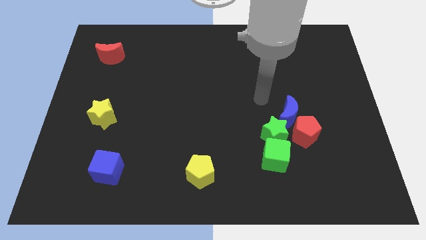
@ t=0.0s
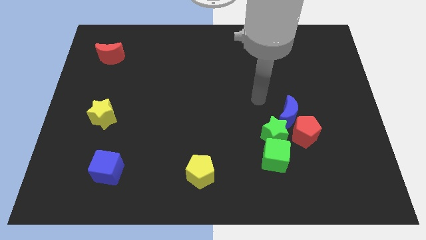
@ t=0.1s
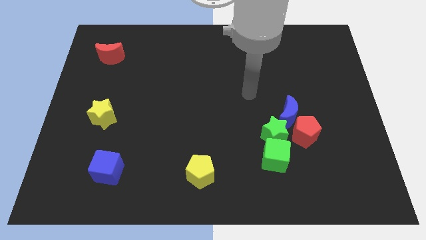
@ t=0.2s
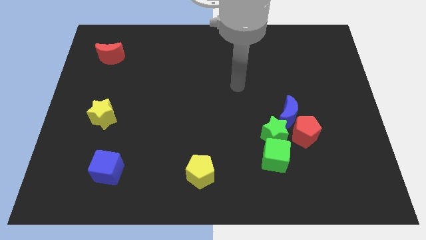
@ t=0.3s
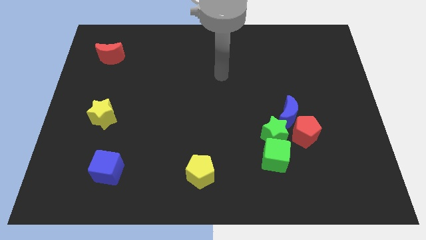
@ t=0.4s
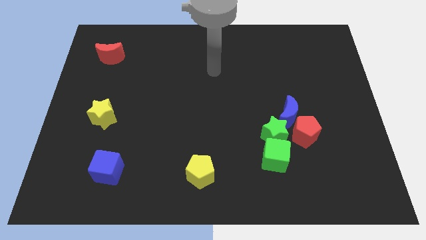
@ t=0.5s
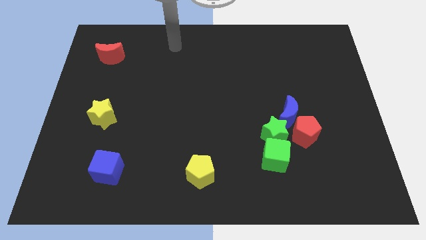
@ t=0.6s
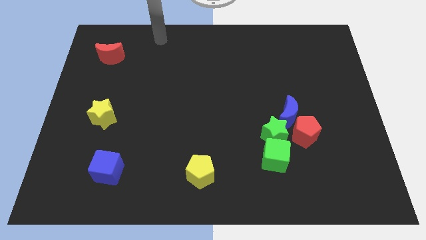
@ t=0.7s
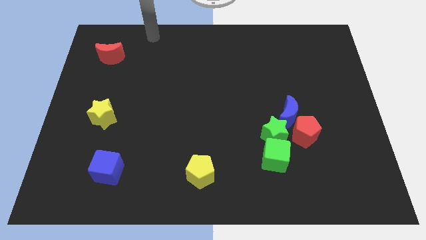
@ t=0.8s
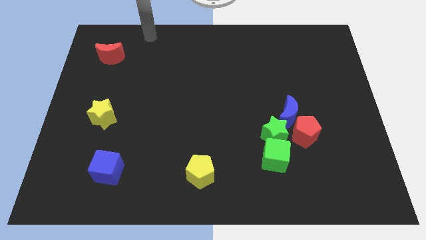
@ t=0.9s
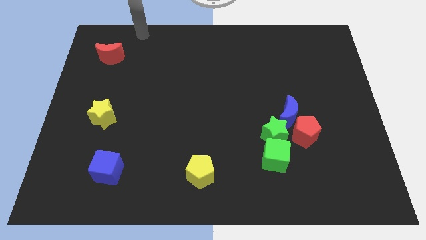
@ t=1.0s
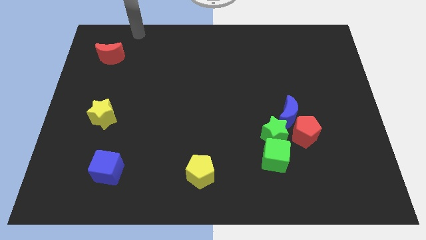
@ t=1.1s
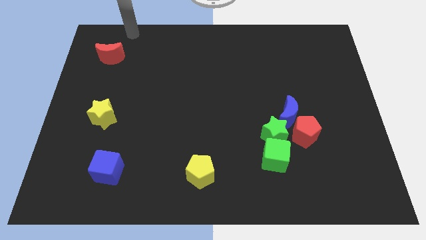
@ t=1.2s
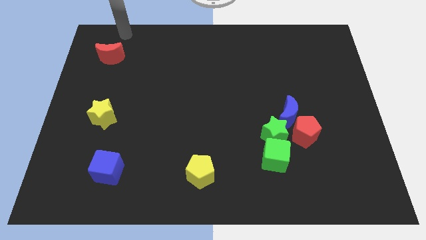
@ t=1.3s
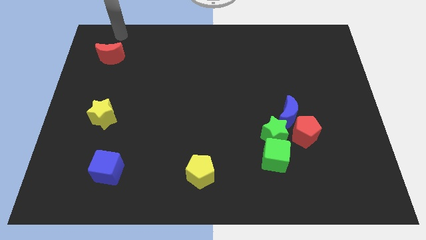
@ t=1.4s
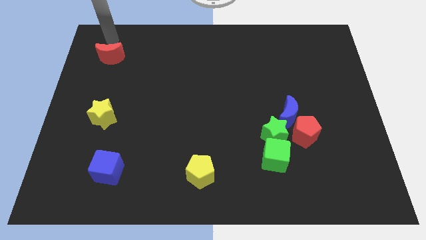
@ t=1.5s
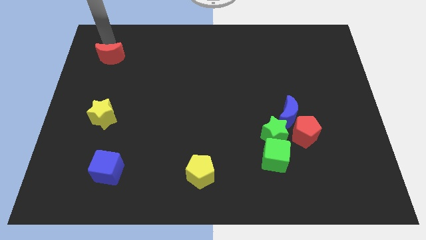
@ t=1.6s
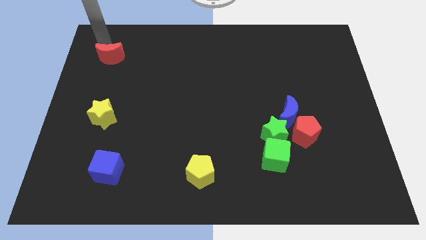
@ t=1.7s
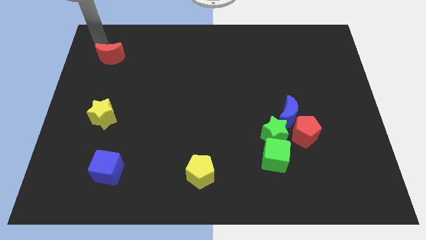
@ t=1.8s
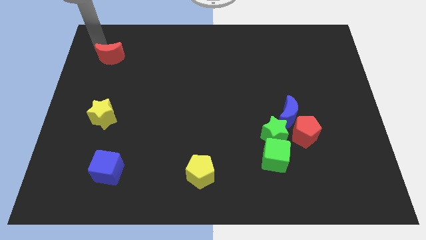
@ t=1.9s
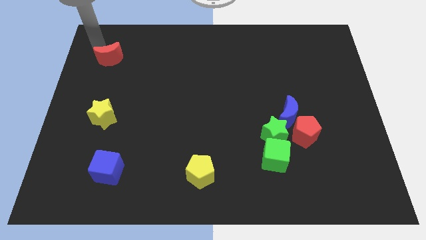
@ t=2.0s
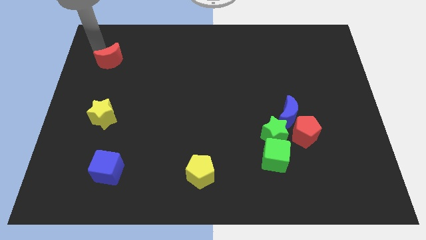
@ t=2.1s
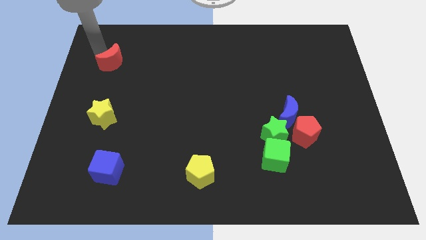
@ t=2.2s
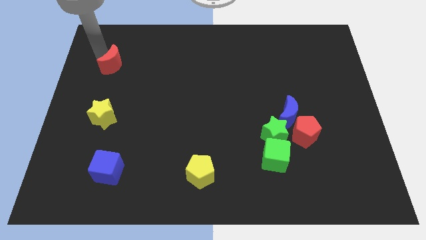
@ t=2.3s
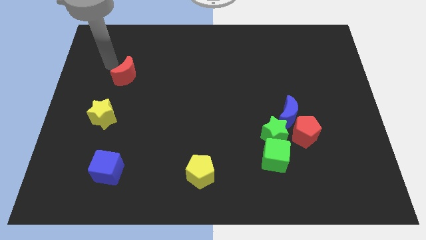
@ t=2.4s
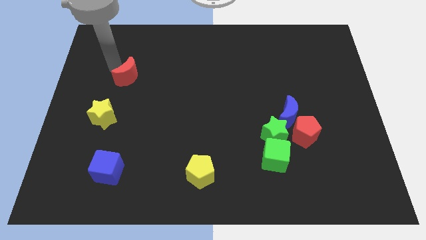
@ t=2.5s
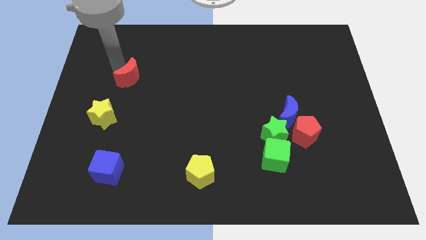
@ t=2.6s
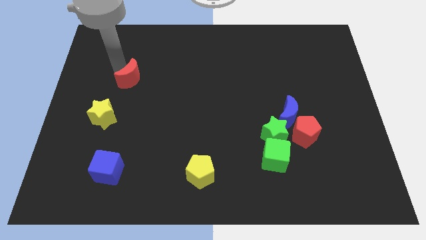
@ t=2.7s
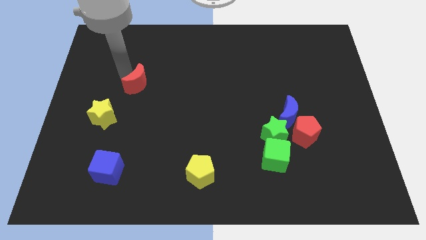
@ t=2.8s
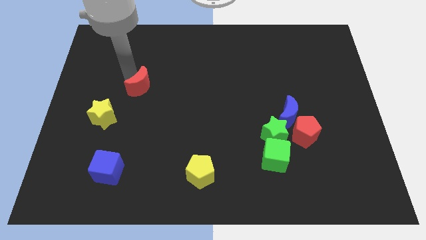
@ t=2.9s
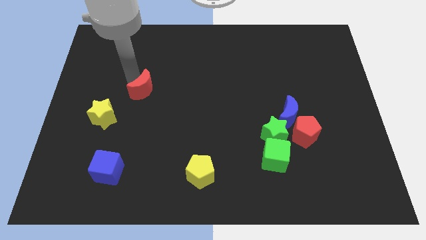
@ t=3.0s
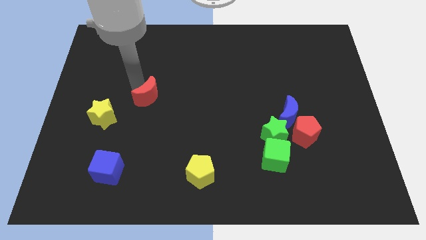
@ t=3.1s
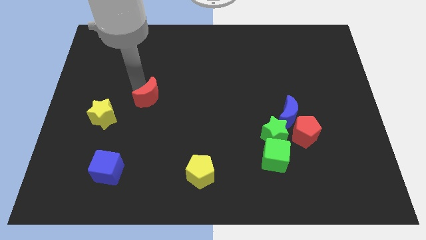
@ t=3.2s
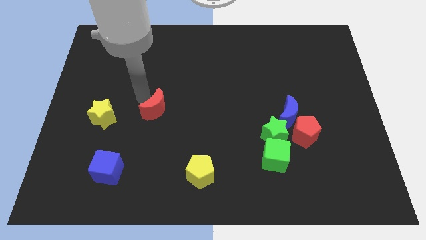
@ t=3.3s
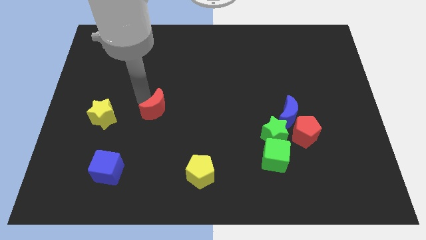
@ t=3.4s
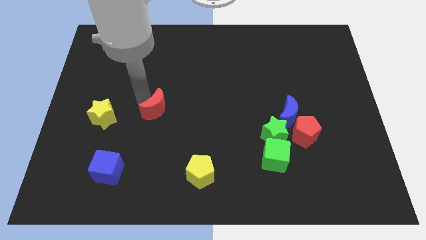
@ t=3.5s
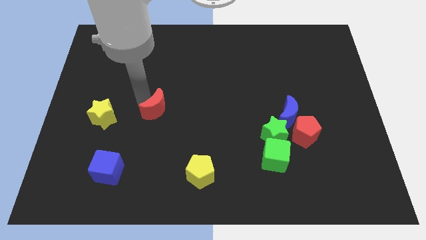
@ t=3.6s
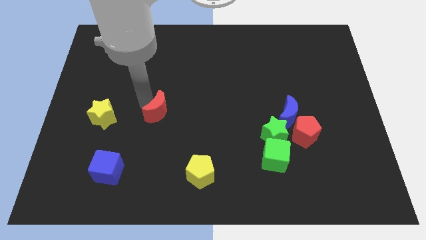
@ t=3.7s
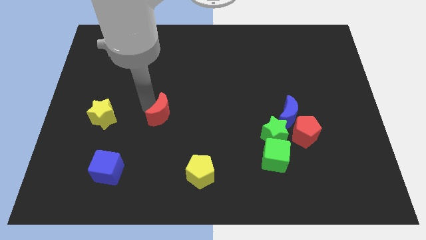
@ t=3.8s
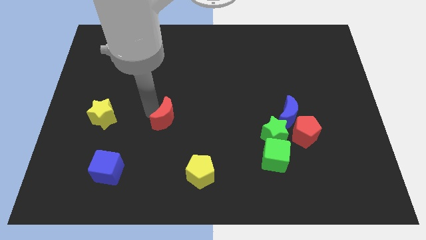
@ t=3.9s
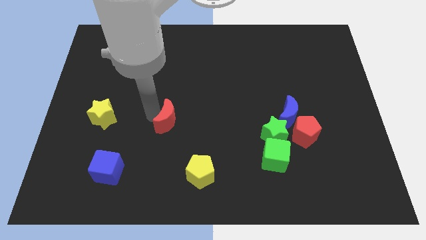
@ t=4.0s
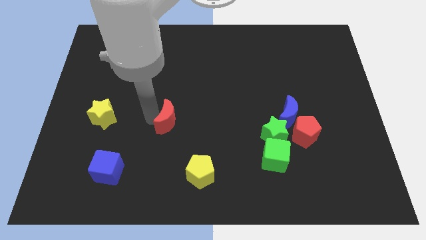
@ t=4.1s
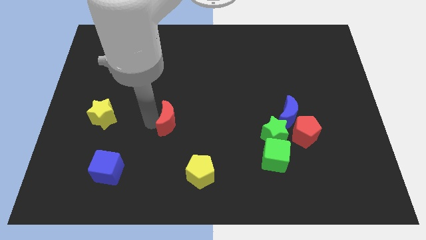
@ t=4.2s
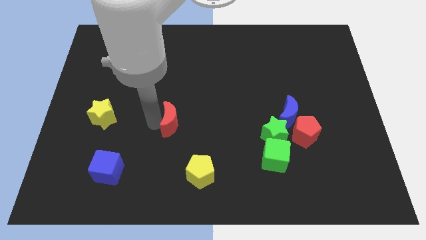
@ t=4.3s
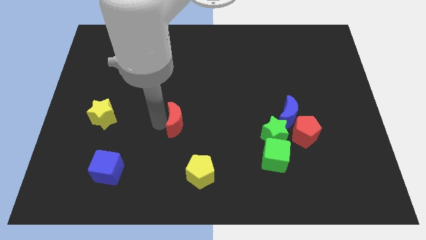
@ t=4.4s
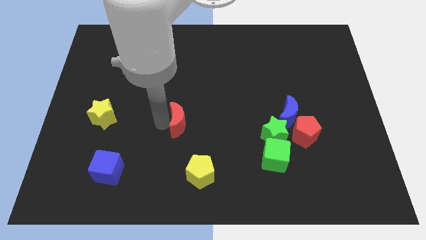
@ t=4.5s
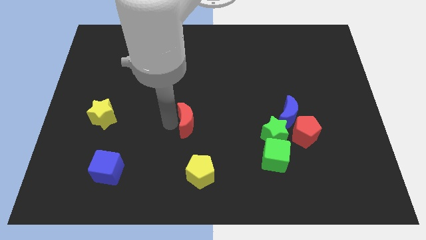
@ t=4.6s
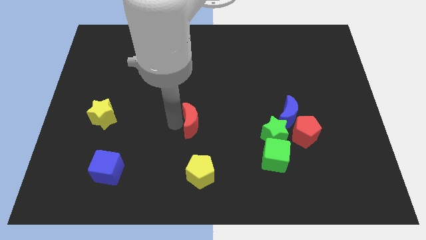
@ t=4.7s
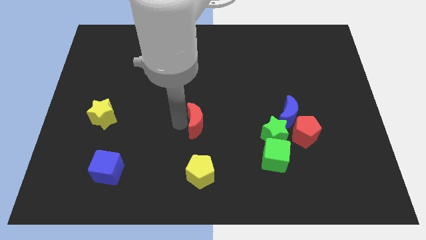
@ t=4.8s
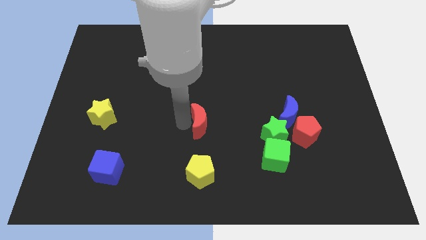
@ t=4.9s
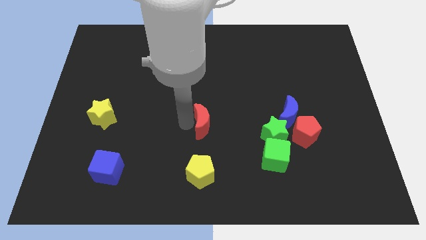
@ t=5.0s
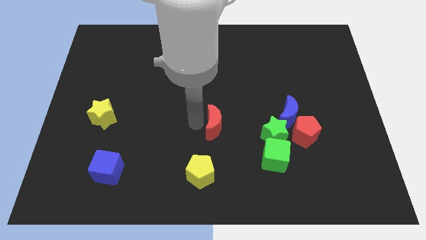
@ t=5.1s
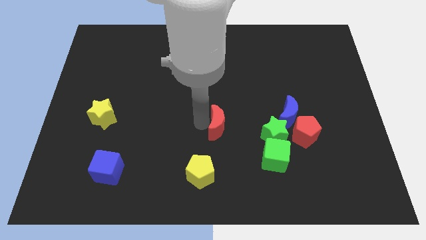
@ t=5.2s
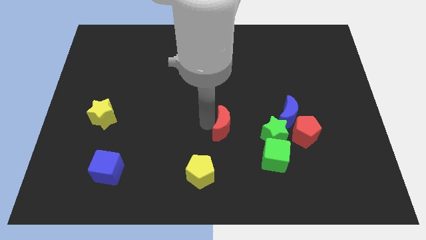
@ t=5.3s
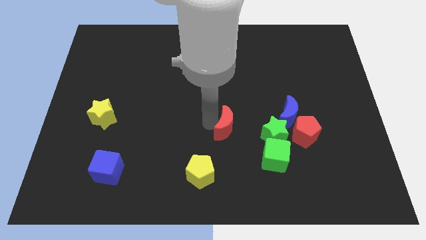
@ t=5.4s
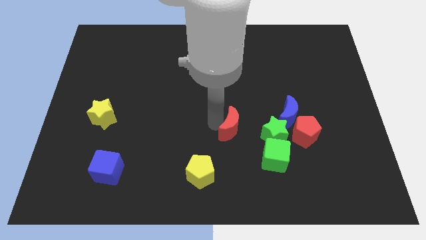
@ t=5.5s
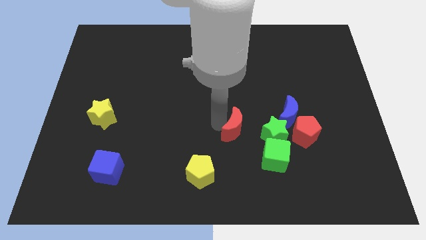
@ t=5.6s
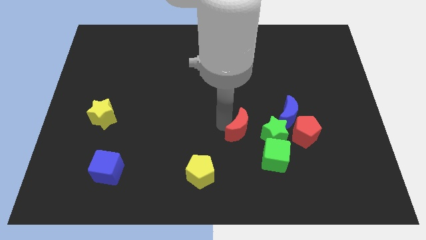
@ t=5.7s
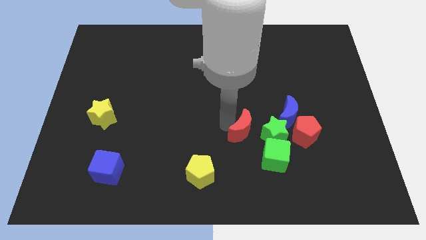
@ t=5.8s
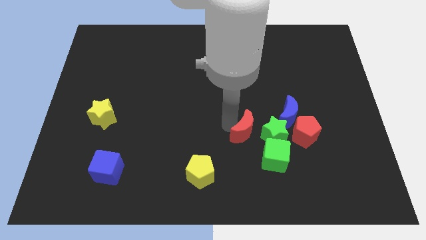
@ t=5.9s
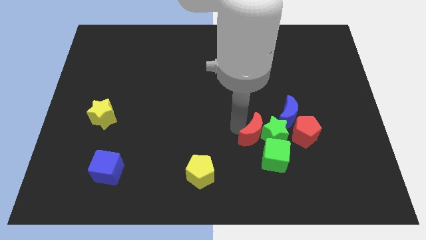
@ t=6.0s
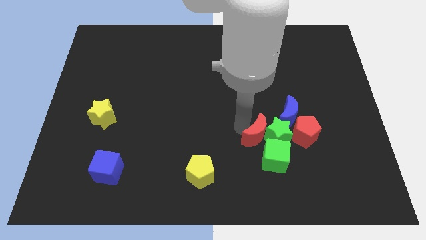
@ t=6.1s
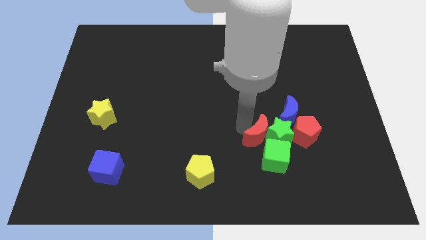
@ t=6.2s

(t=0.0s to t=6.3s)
move the red moon next to the green star

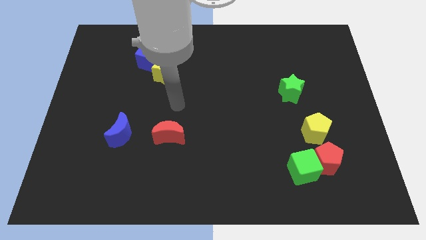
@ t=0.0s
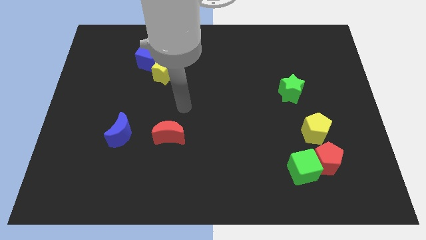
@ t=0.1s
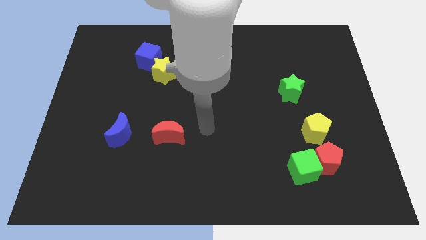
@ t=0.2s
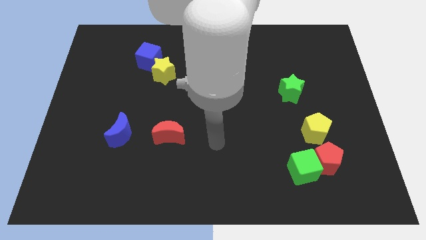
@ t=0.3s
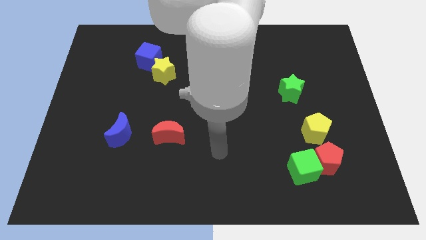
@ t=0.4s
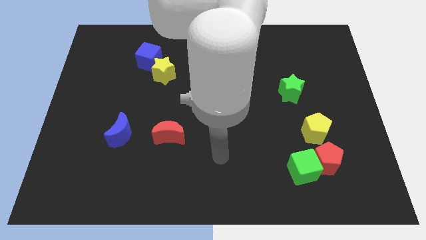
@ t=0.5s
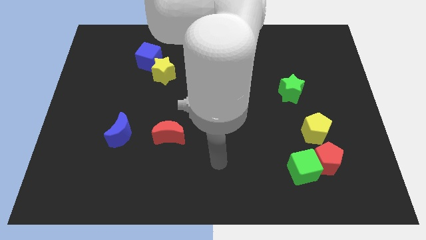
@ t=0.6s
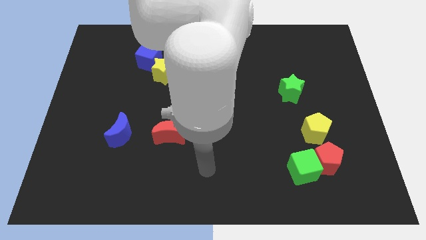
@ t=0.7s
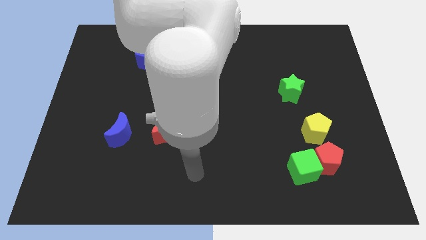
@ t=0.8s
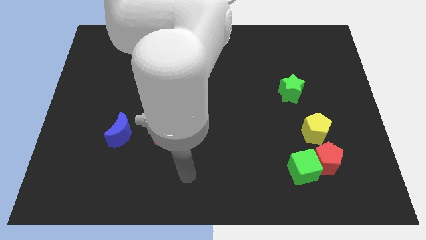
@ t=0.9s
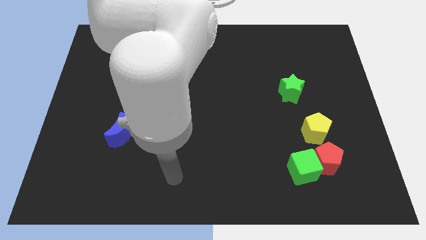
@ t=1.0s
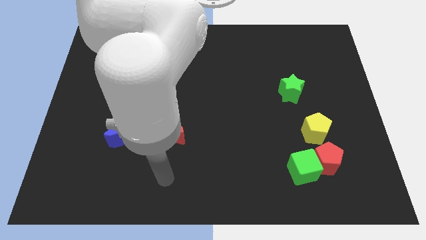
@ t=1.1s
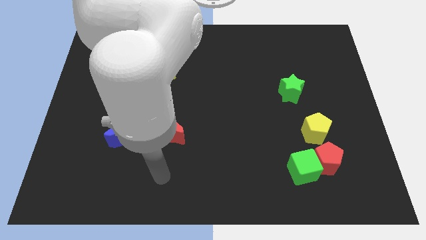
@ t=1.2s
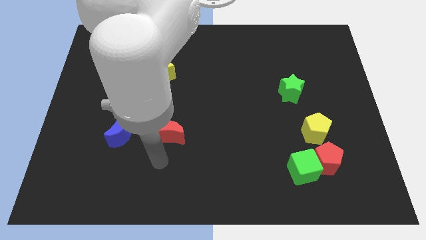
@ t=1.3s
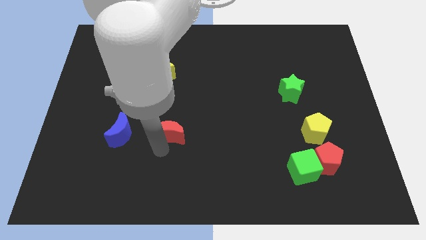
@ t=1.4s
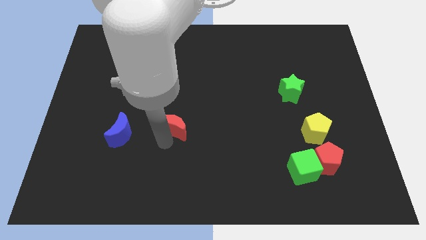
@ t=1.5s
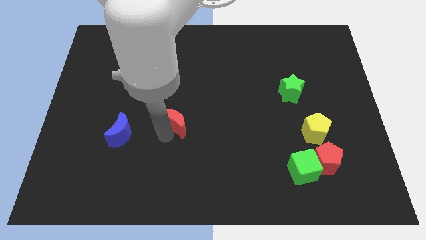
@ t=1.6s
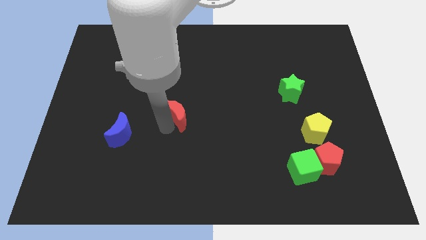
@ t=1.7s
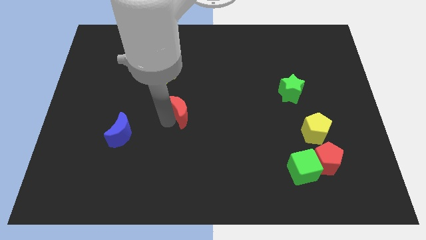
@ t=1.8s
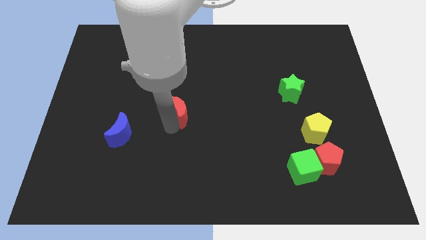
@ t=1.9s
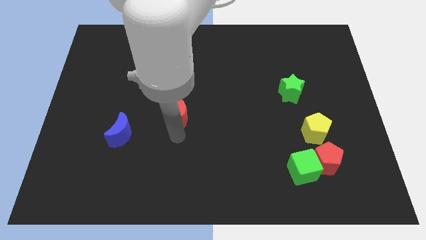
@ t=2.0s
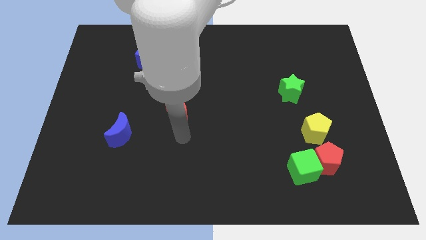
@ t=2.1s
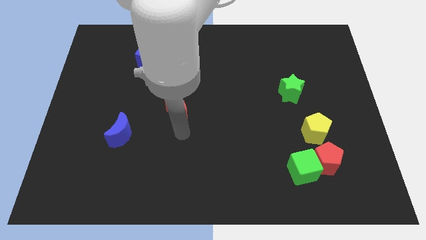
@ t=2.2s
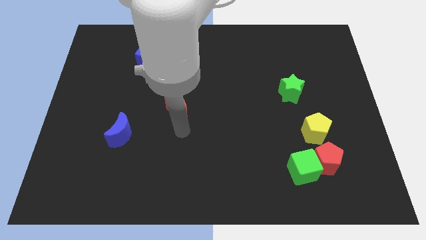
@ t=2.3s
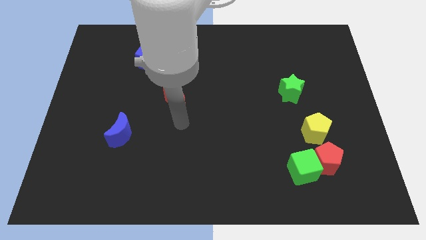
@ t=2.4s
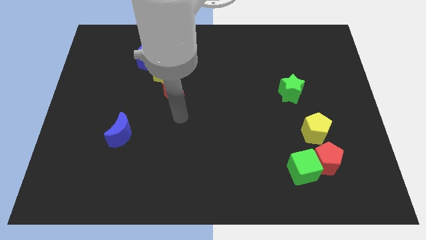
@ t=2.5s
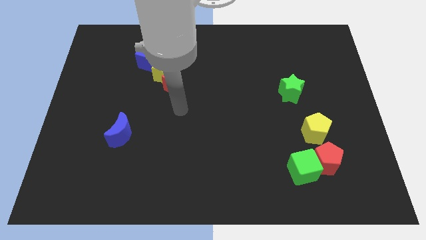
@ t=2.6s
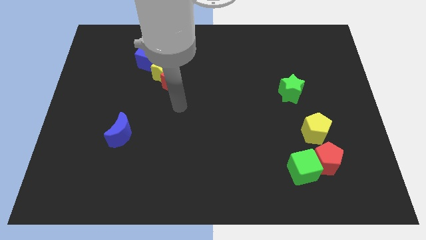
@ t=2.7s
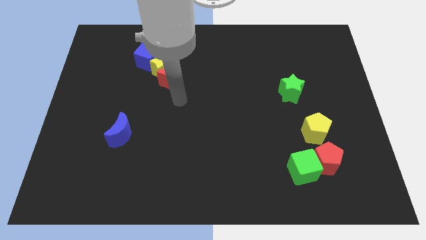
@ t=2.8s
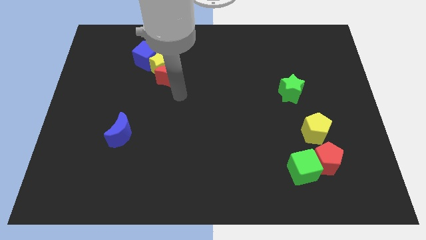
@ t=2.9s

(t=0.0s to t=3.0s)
push the red moon to the yellow star
